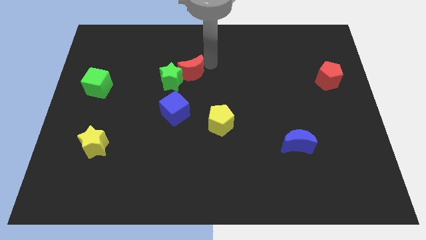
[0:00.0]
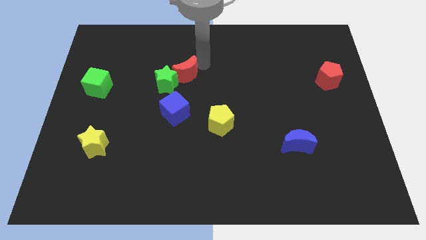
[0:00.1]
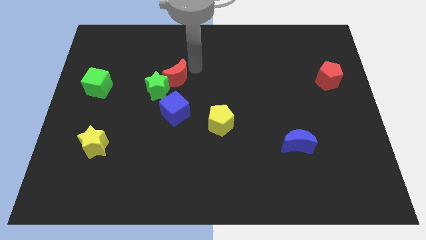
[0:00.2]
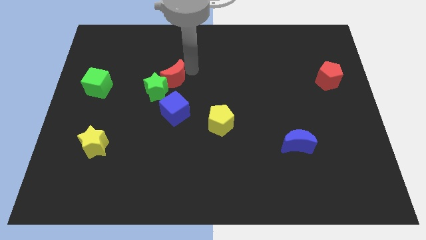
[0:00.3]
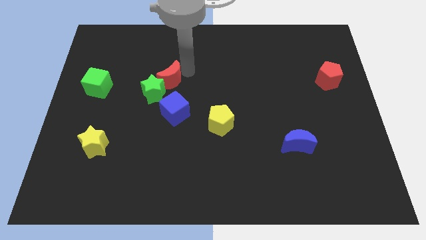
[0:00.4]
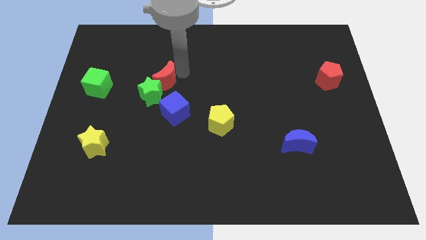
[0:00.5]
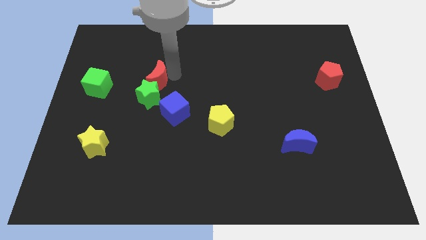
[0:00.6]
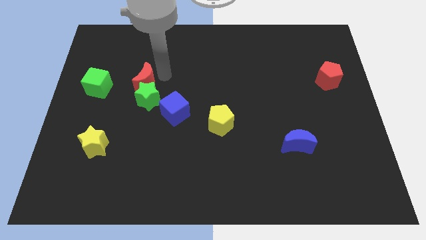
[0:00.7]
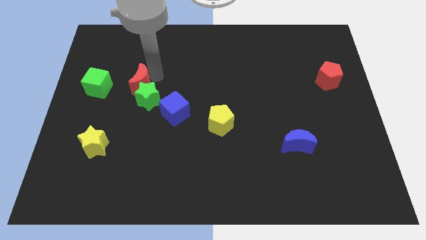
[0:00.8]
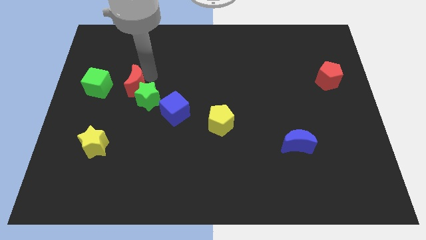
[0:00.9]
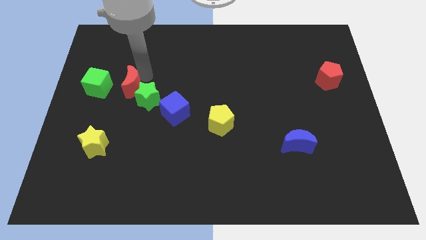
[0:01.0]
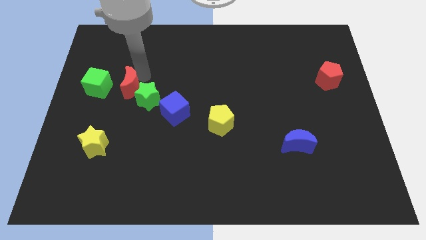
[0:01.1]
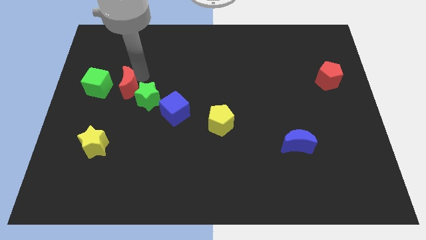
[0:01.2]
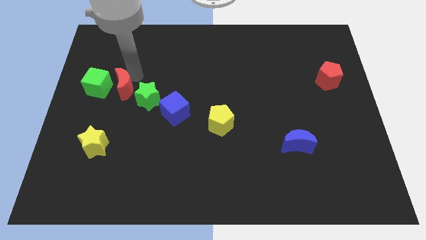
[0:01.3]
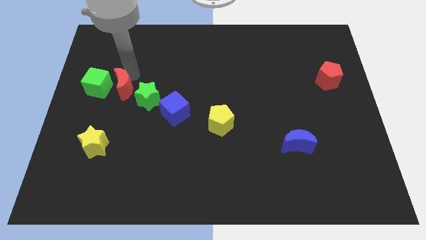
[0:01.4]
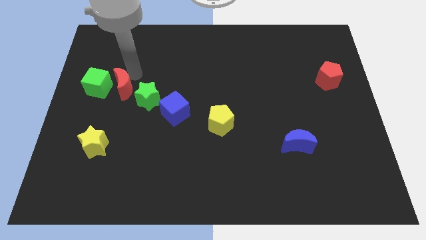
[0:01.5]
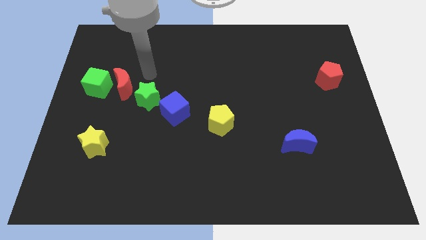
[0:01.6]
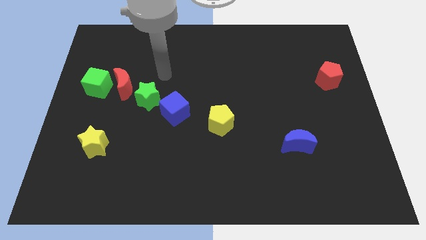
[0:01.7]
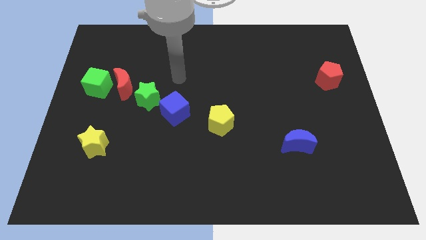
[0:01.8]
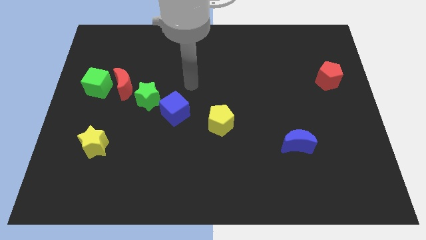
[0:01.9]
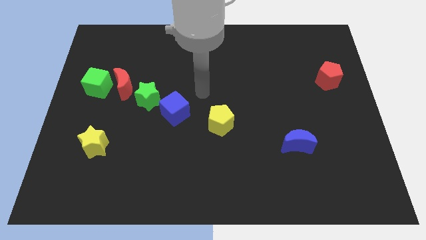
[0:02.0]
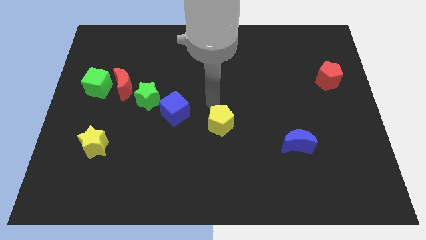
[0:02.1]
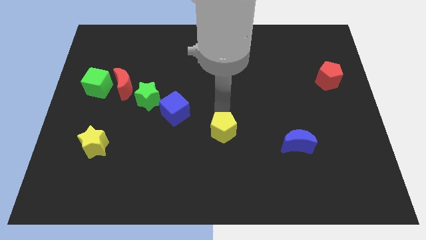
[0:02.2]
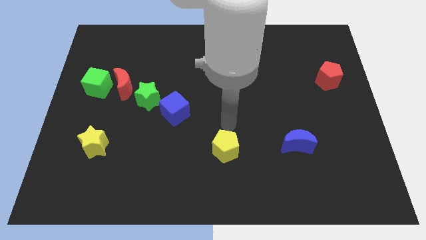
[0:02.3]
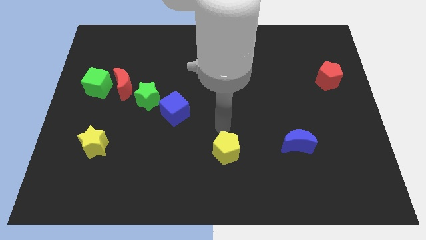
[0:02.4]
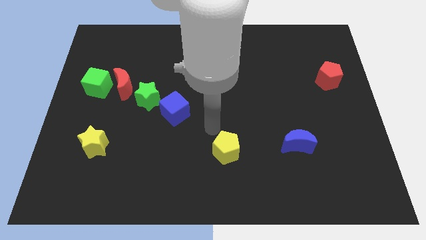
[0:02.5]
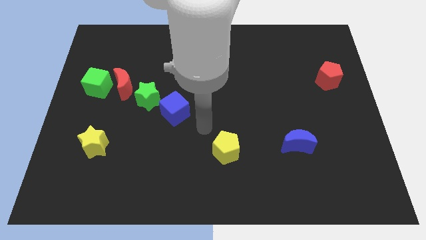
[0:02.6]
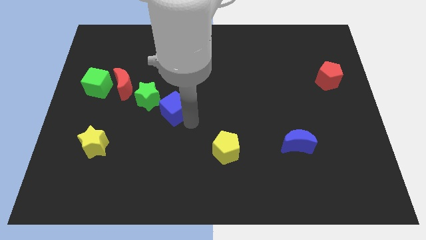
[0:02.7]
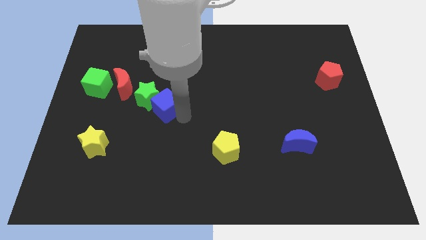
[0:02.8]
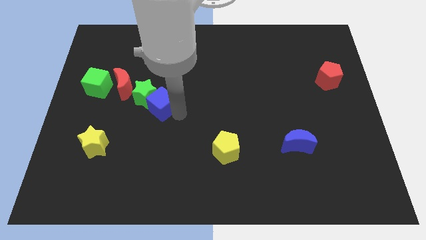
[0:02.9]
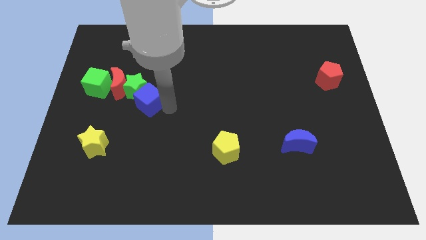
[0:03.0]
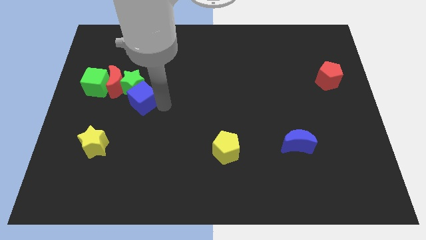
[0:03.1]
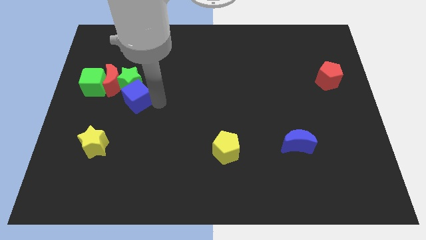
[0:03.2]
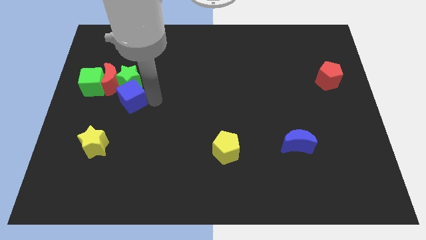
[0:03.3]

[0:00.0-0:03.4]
push the red crescent beside the green cube

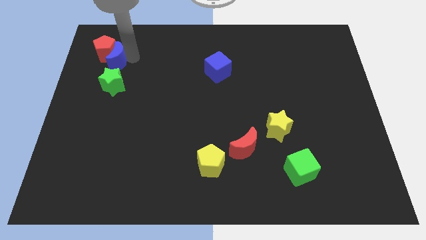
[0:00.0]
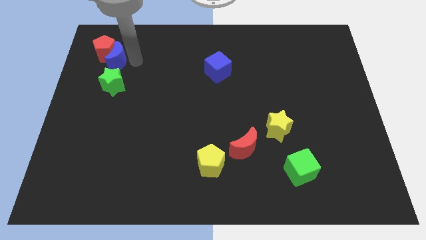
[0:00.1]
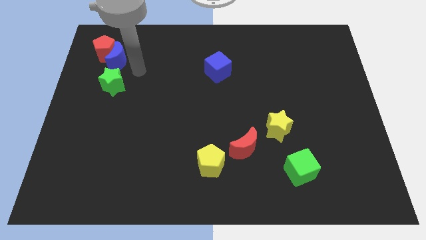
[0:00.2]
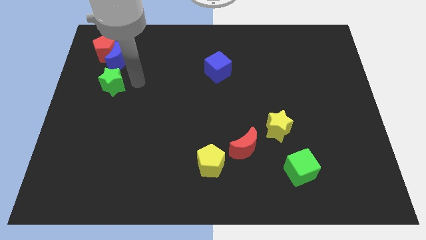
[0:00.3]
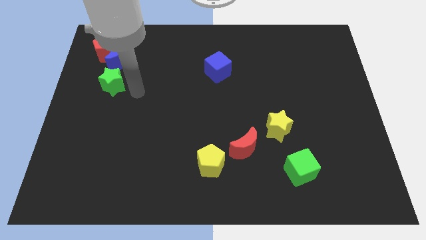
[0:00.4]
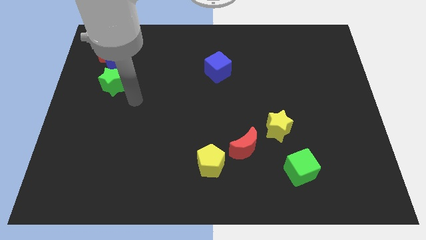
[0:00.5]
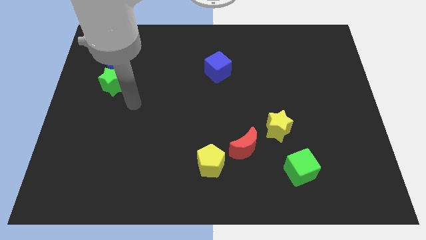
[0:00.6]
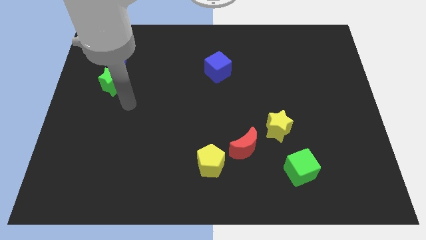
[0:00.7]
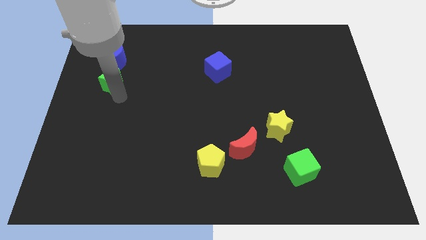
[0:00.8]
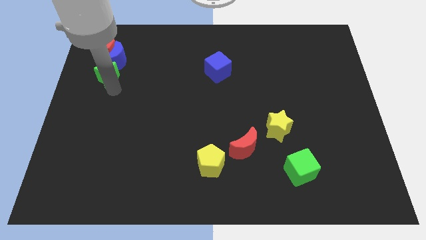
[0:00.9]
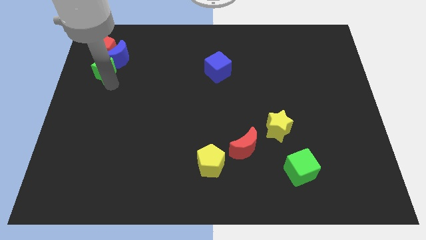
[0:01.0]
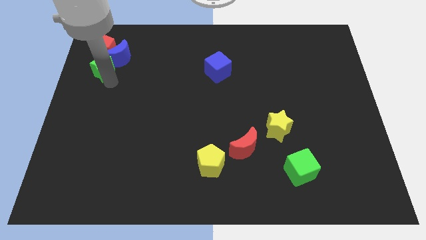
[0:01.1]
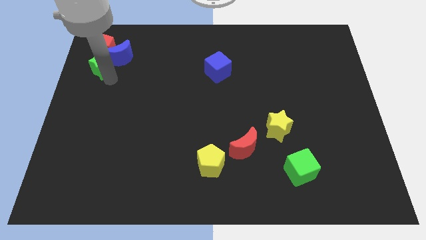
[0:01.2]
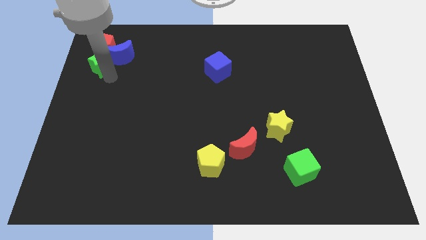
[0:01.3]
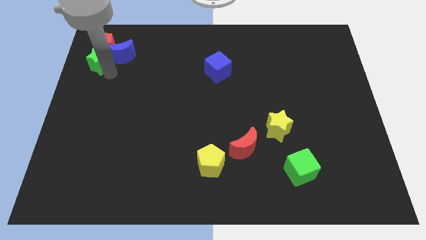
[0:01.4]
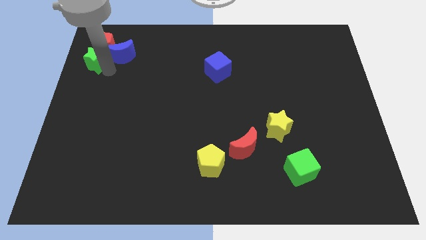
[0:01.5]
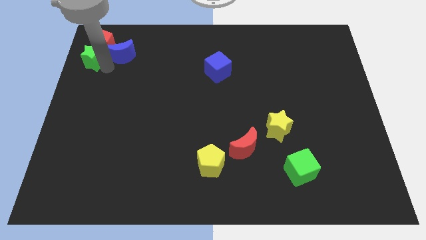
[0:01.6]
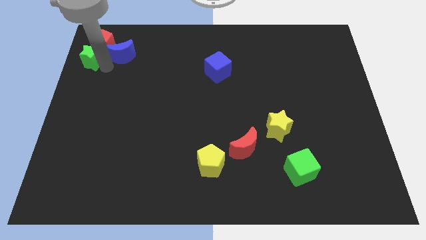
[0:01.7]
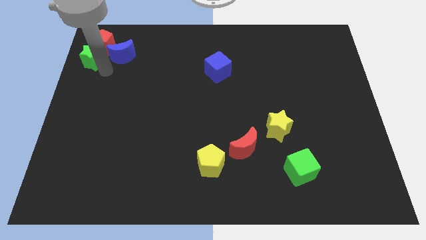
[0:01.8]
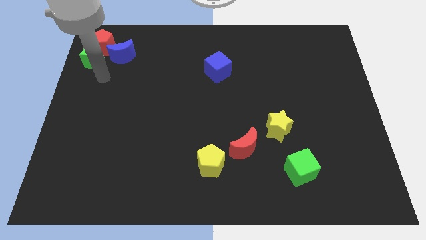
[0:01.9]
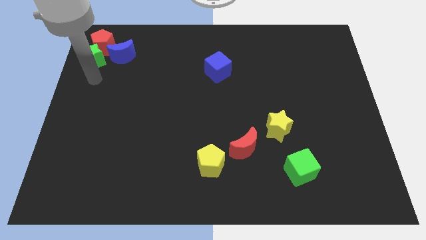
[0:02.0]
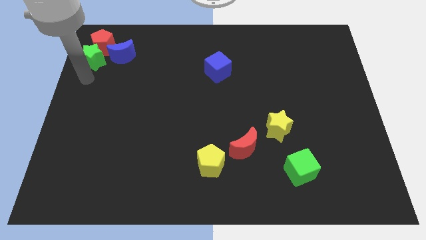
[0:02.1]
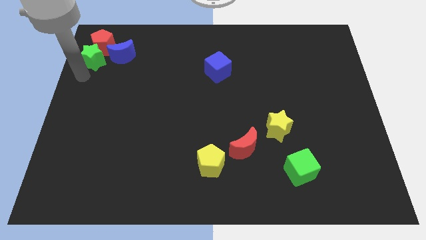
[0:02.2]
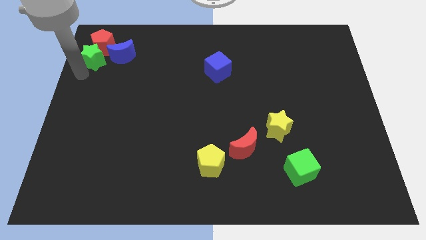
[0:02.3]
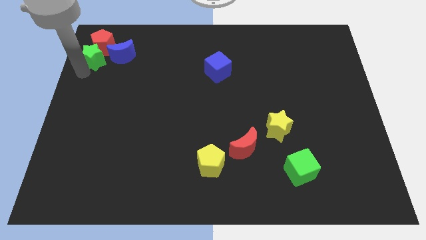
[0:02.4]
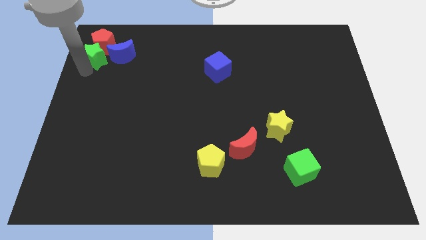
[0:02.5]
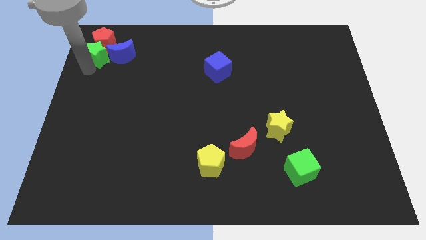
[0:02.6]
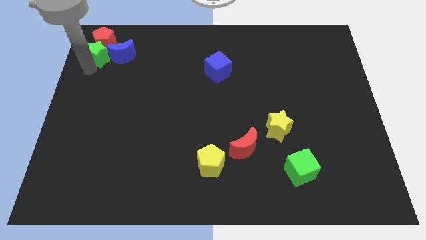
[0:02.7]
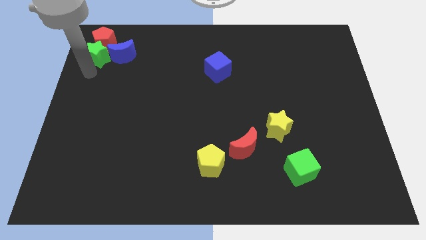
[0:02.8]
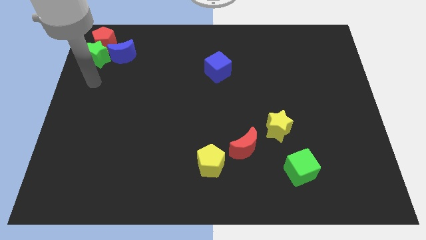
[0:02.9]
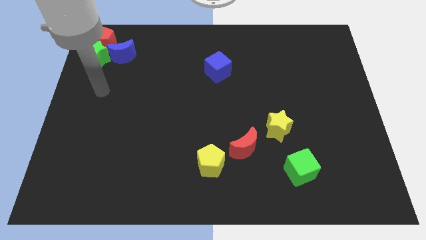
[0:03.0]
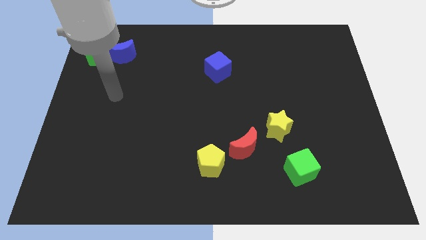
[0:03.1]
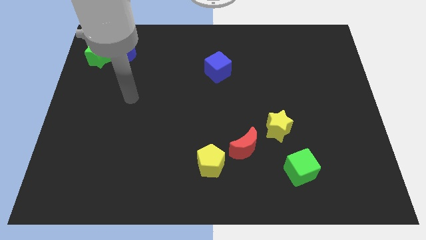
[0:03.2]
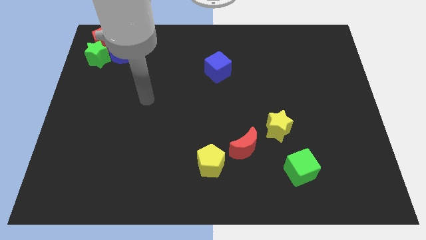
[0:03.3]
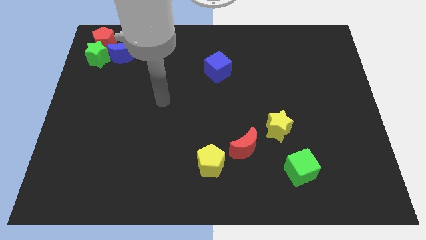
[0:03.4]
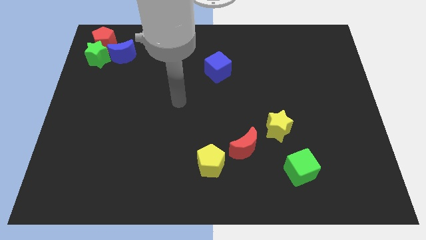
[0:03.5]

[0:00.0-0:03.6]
push the green star into the red pentagon

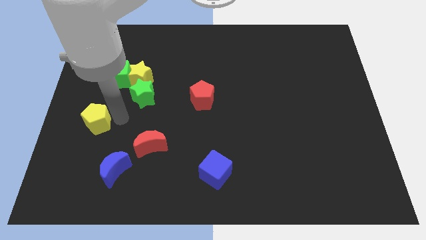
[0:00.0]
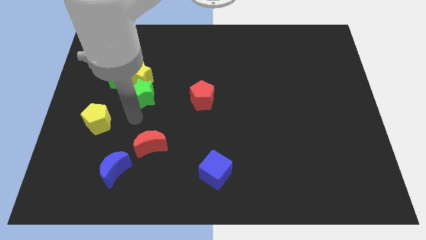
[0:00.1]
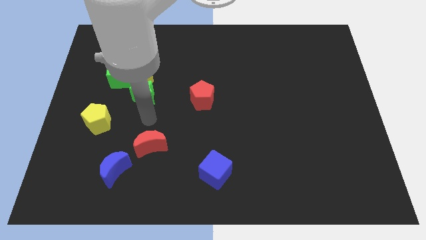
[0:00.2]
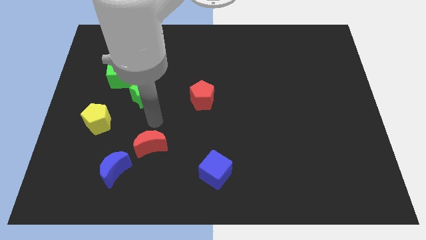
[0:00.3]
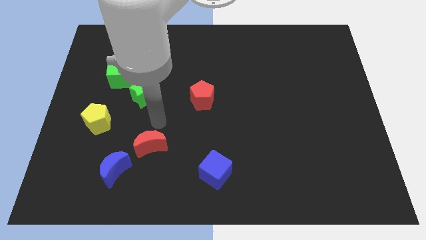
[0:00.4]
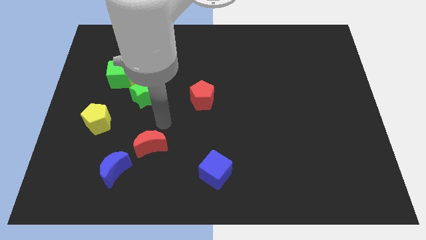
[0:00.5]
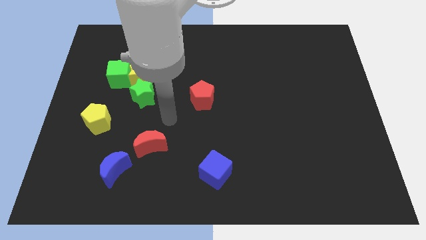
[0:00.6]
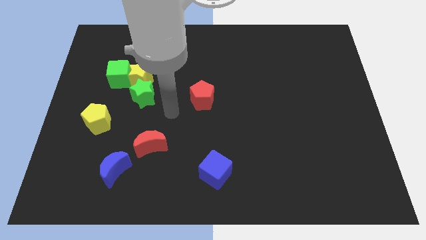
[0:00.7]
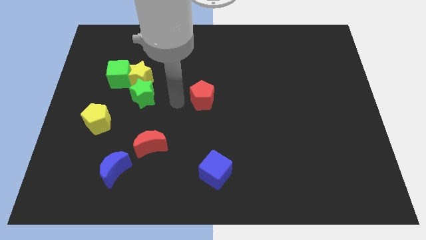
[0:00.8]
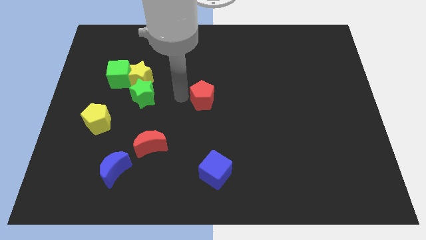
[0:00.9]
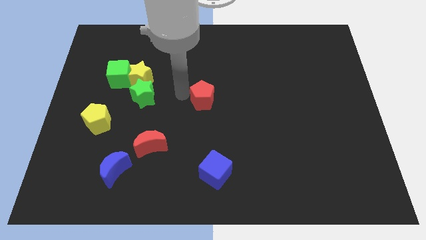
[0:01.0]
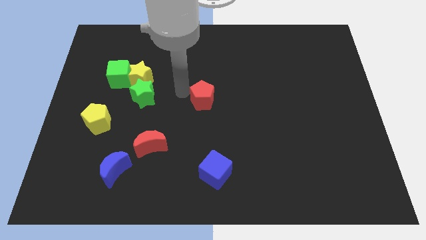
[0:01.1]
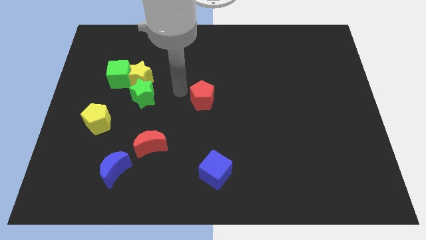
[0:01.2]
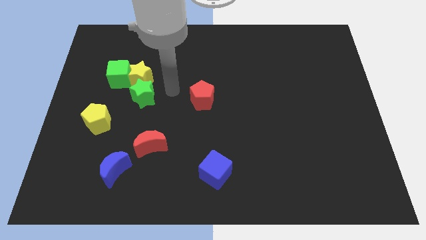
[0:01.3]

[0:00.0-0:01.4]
place your arm in between the red pentagon and green star

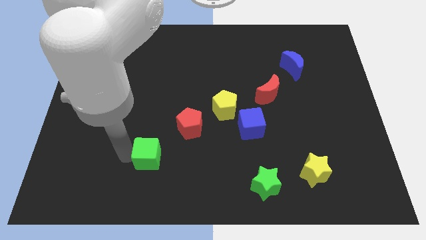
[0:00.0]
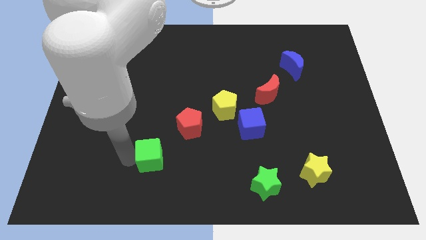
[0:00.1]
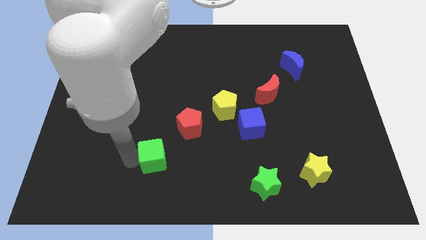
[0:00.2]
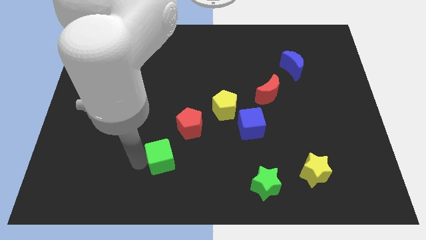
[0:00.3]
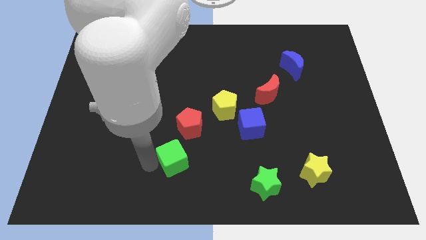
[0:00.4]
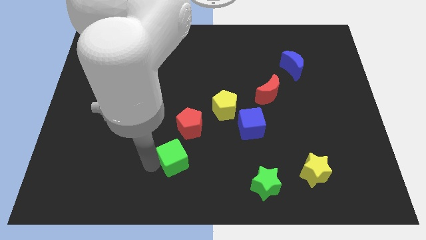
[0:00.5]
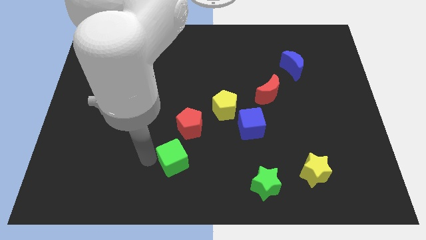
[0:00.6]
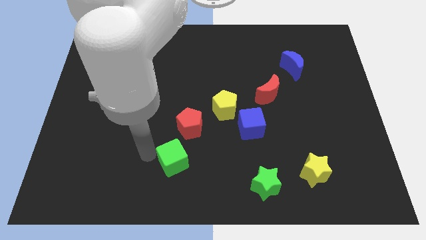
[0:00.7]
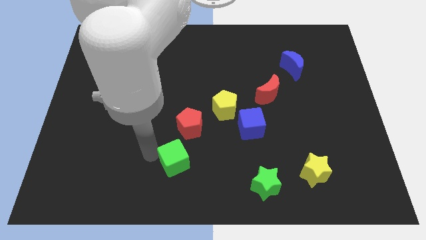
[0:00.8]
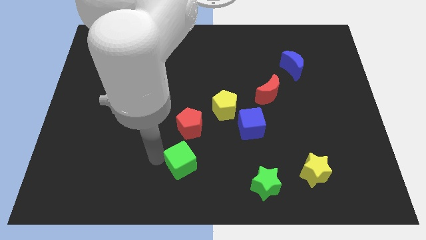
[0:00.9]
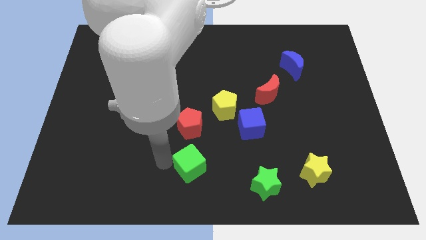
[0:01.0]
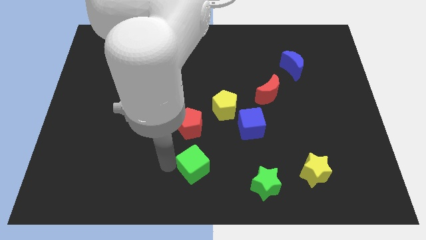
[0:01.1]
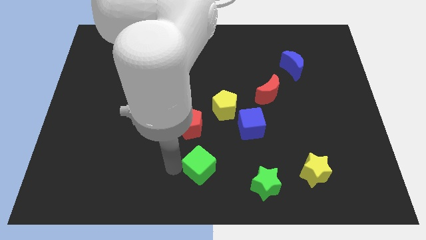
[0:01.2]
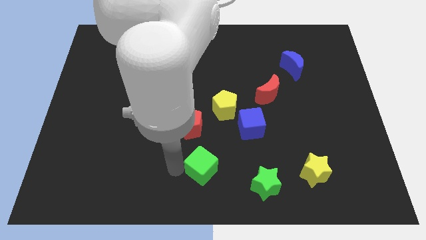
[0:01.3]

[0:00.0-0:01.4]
place the green cube below the red pentagon
